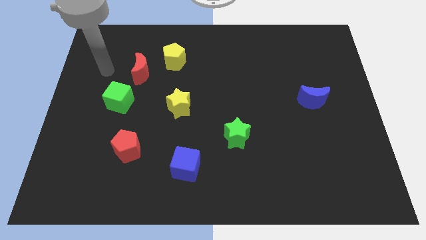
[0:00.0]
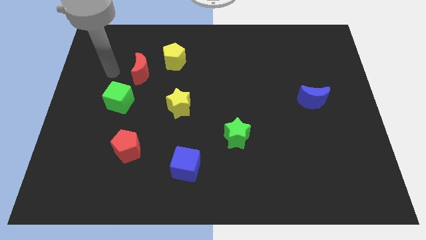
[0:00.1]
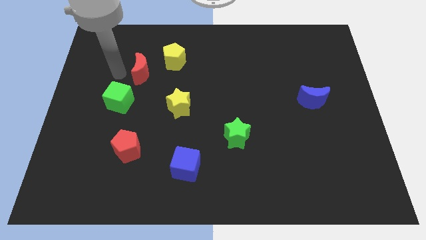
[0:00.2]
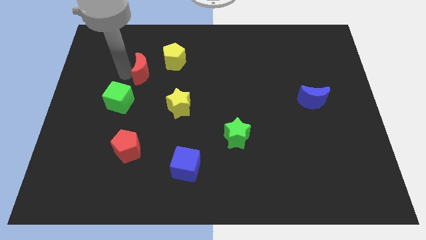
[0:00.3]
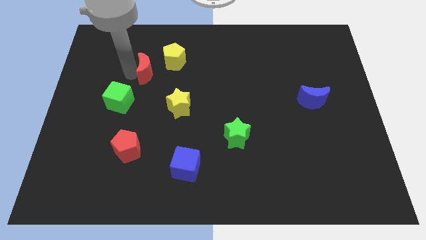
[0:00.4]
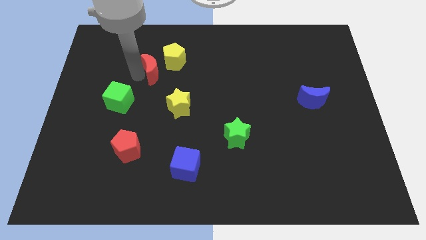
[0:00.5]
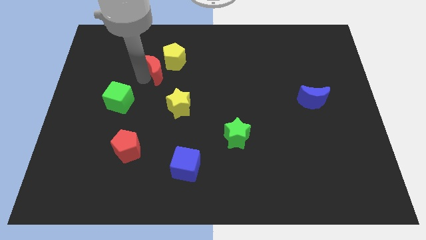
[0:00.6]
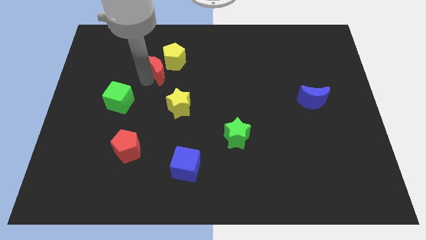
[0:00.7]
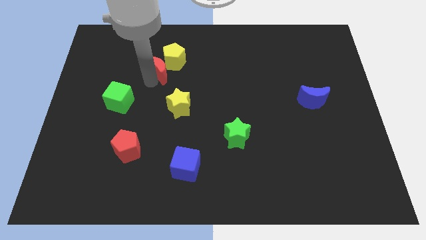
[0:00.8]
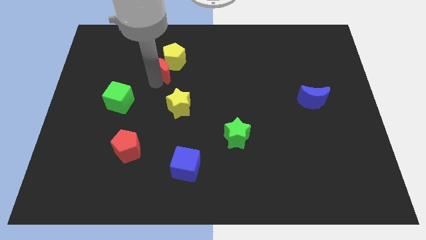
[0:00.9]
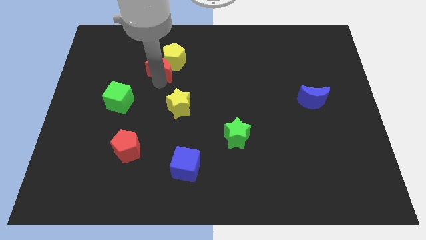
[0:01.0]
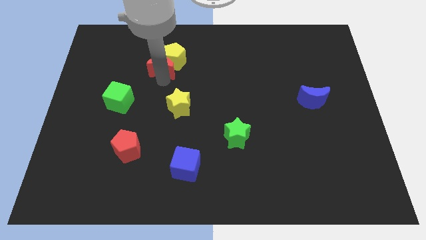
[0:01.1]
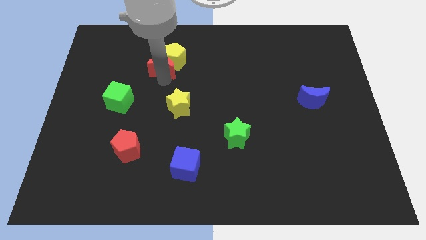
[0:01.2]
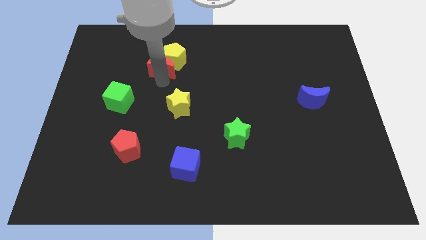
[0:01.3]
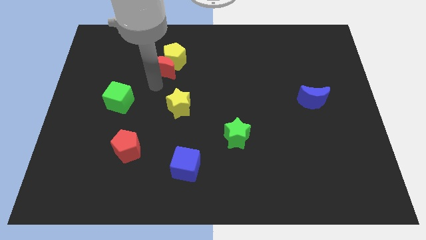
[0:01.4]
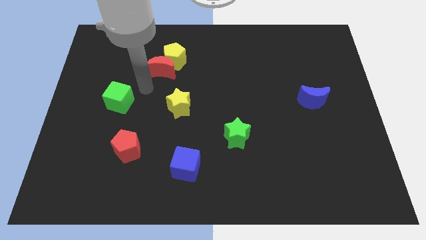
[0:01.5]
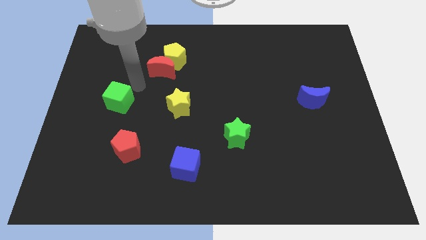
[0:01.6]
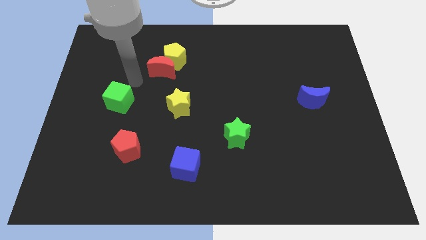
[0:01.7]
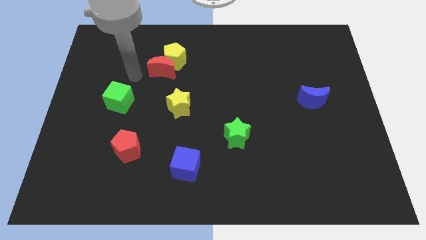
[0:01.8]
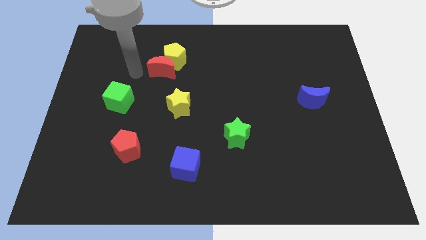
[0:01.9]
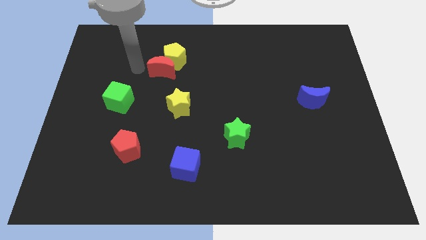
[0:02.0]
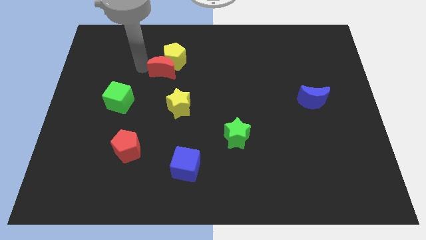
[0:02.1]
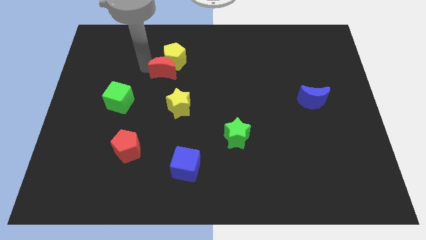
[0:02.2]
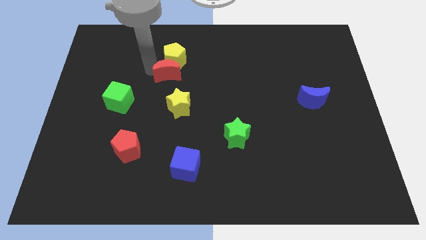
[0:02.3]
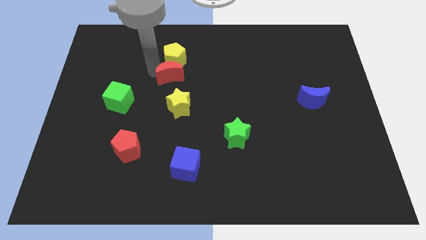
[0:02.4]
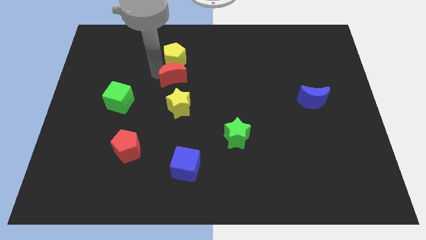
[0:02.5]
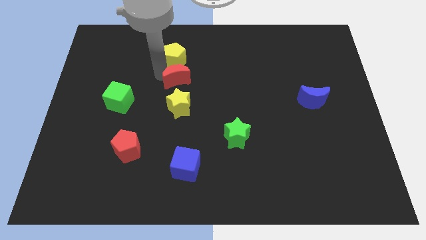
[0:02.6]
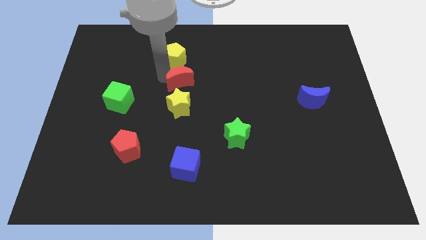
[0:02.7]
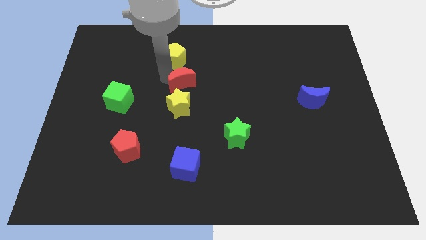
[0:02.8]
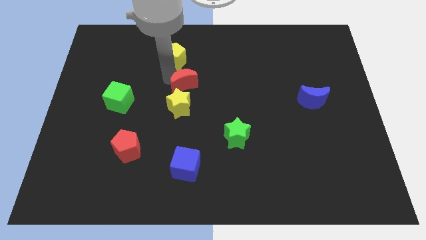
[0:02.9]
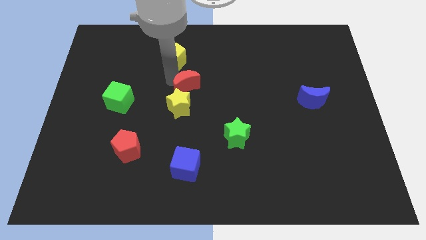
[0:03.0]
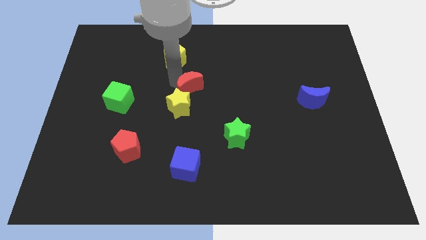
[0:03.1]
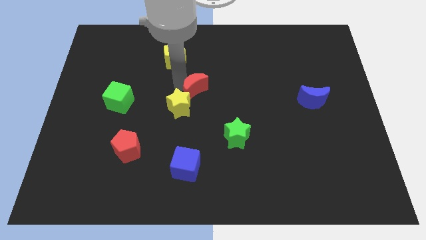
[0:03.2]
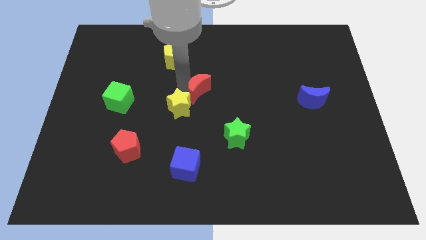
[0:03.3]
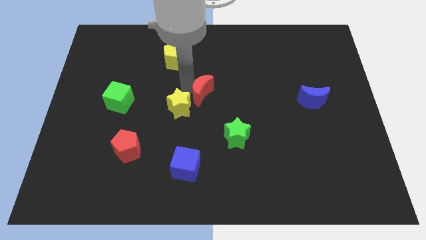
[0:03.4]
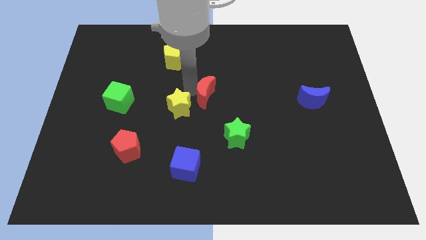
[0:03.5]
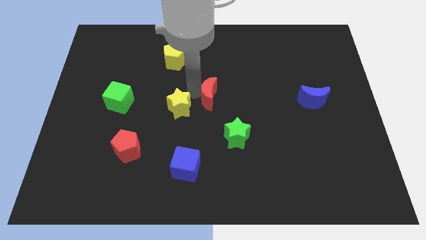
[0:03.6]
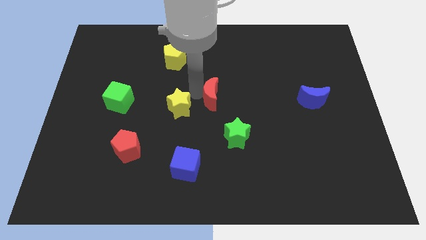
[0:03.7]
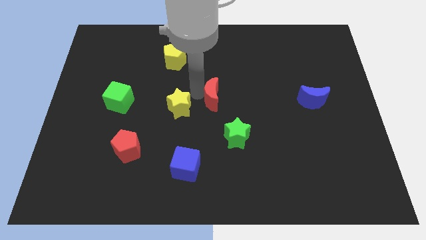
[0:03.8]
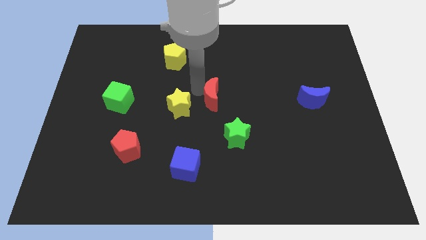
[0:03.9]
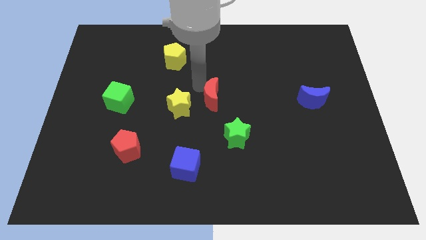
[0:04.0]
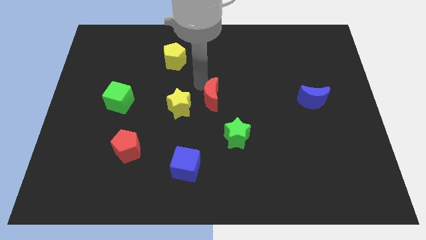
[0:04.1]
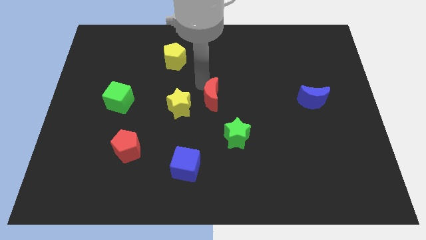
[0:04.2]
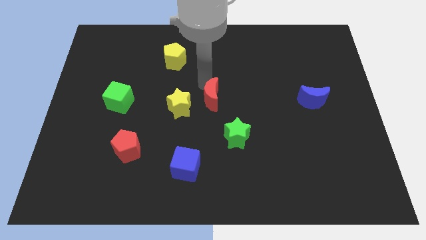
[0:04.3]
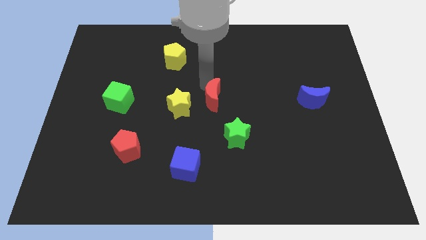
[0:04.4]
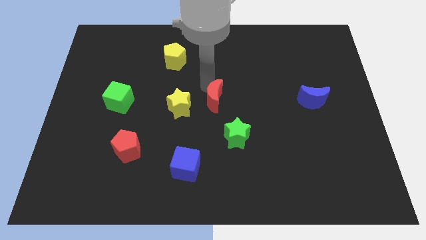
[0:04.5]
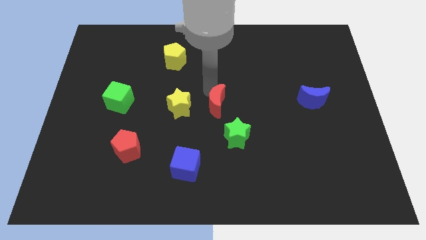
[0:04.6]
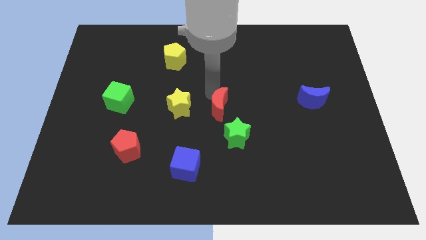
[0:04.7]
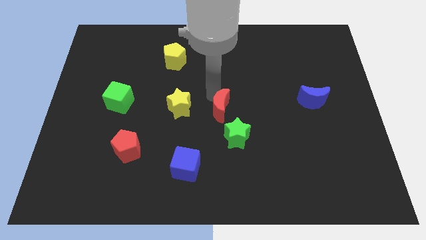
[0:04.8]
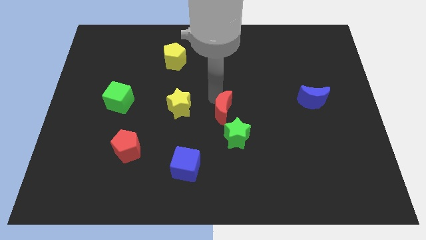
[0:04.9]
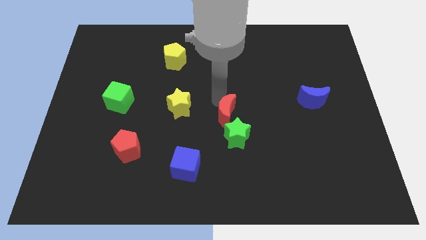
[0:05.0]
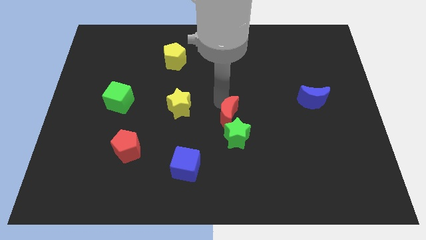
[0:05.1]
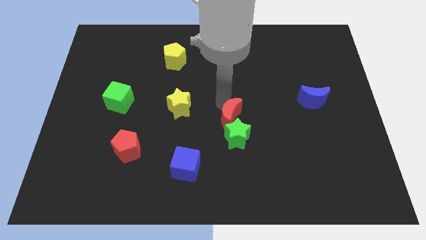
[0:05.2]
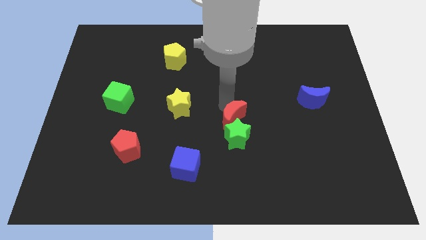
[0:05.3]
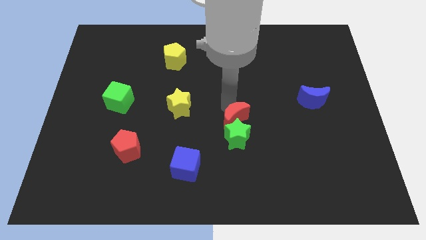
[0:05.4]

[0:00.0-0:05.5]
move the red moon to the green star

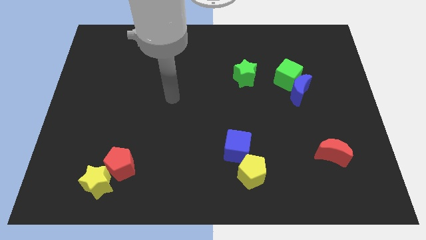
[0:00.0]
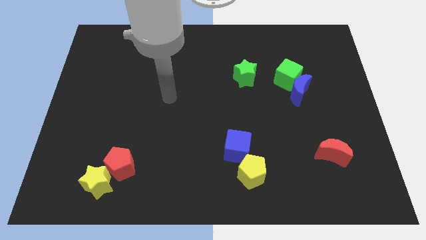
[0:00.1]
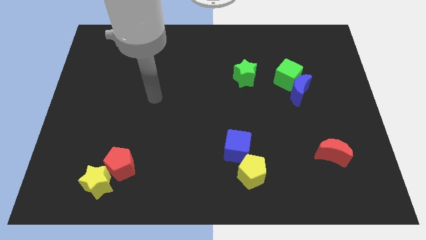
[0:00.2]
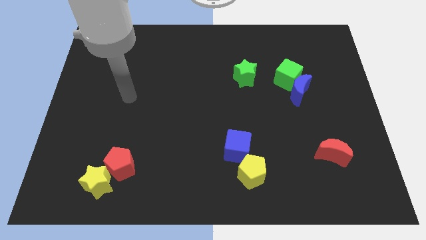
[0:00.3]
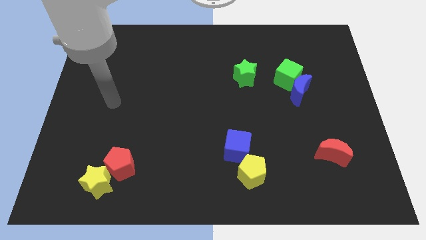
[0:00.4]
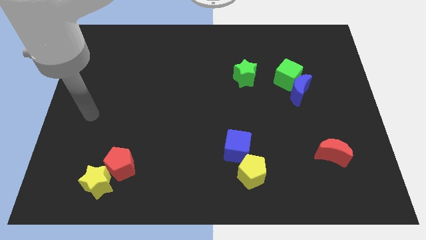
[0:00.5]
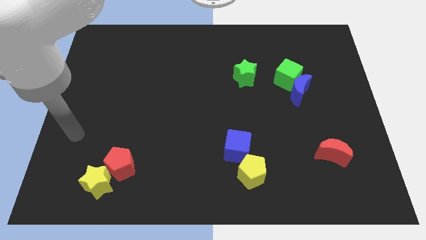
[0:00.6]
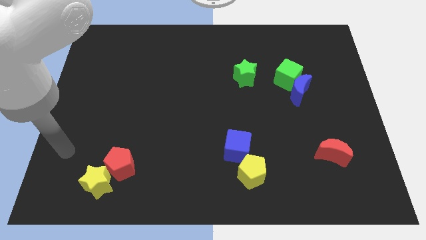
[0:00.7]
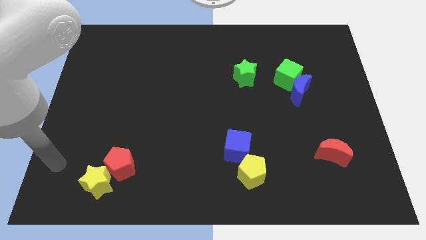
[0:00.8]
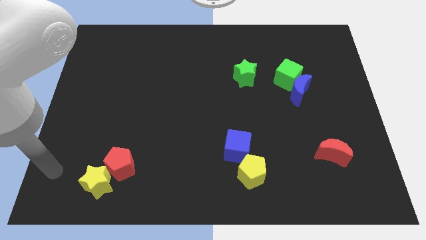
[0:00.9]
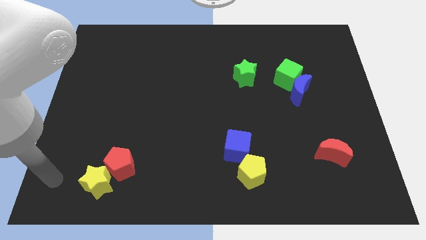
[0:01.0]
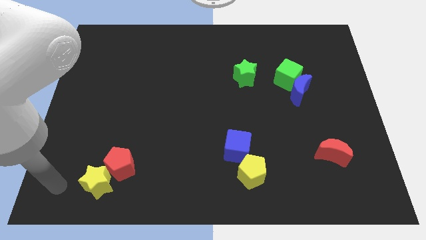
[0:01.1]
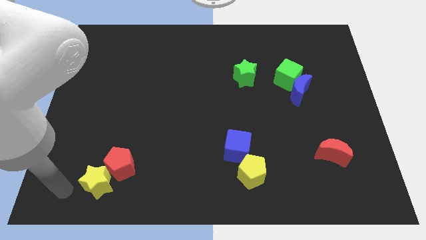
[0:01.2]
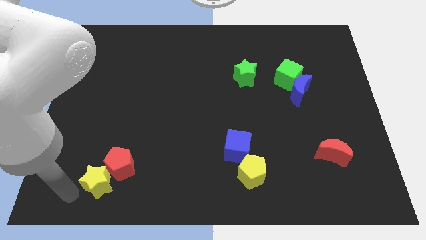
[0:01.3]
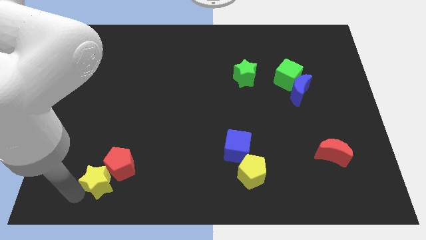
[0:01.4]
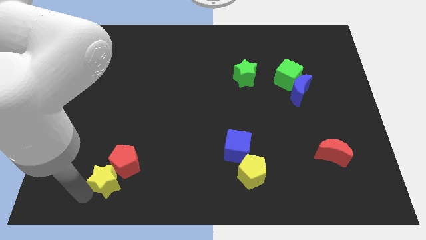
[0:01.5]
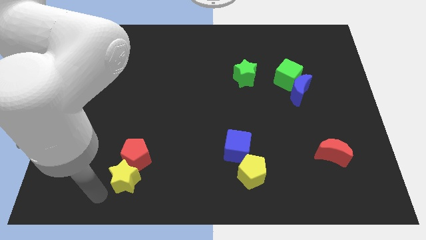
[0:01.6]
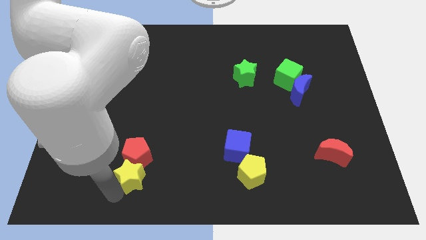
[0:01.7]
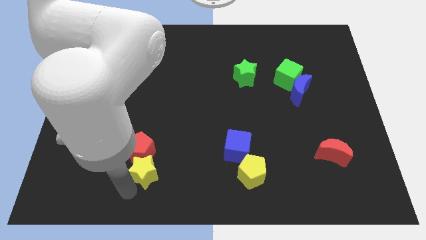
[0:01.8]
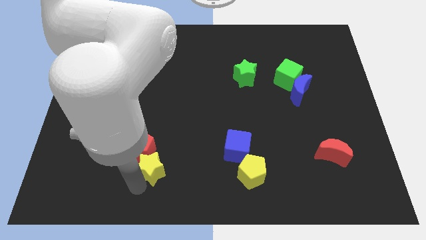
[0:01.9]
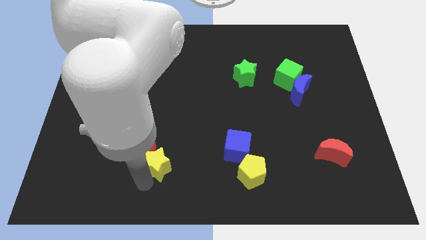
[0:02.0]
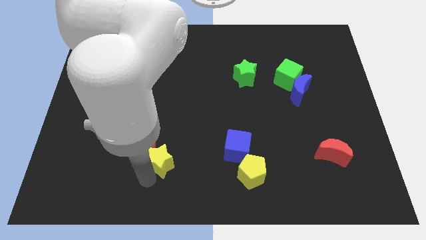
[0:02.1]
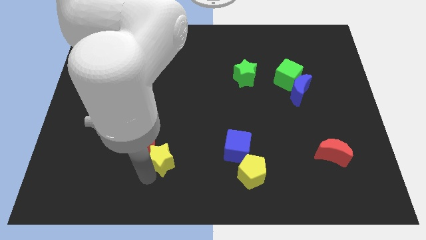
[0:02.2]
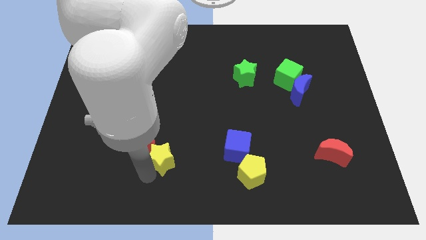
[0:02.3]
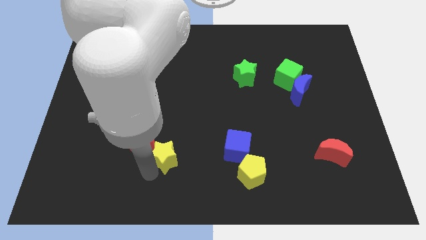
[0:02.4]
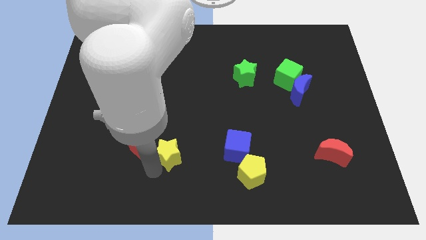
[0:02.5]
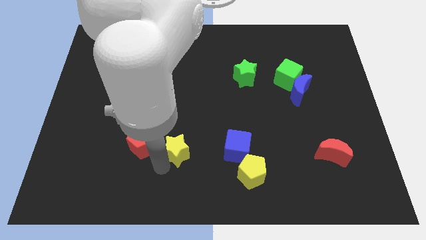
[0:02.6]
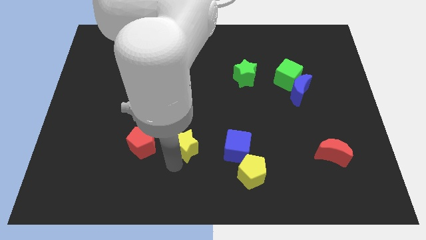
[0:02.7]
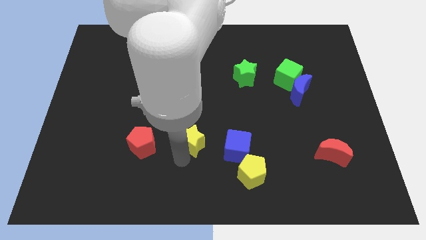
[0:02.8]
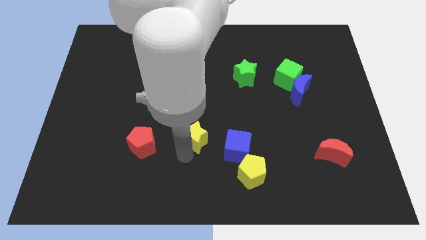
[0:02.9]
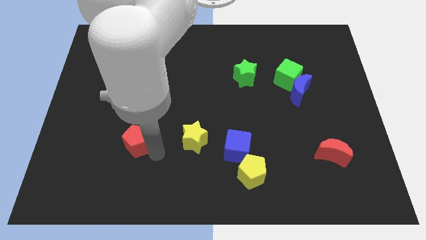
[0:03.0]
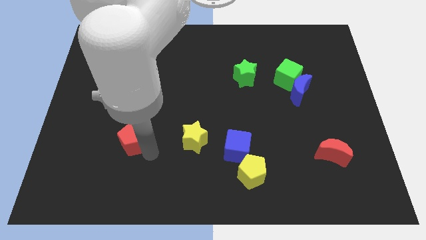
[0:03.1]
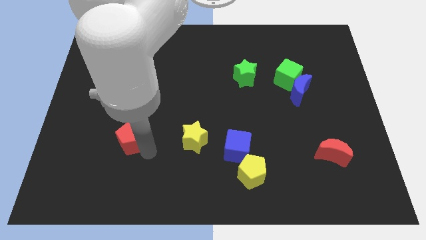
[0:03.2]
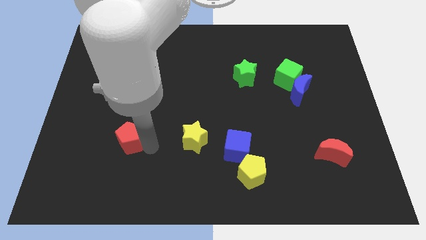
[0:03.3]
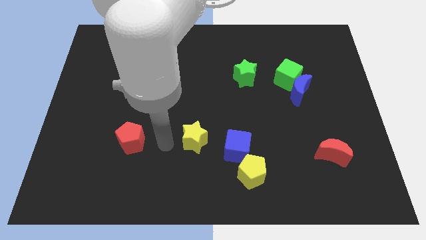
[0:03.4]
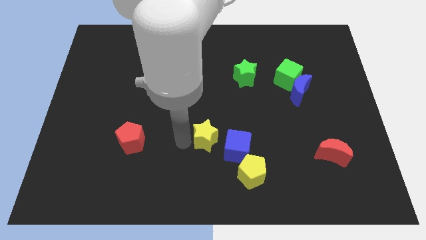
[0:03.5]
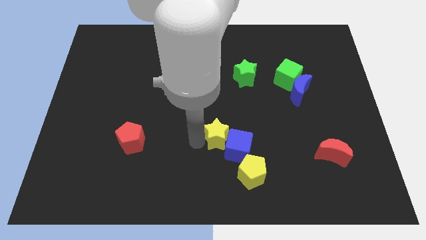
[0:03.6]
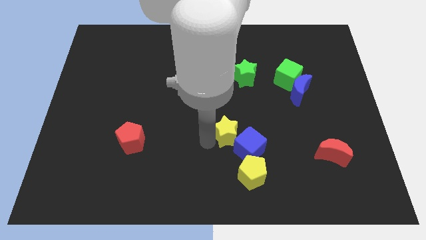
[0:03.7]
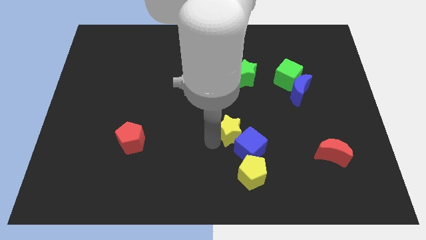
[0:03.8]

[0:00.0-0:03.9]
push the yellow star next to the blue cube
